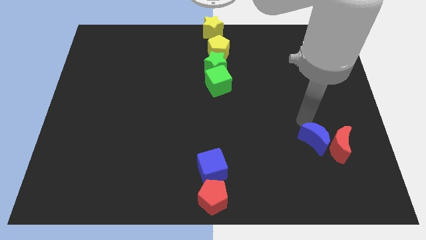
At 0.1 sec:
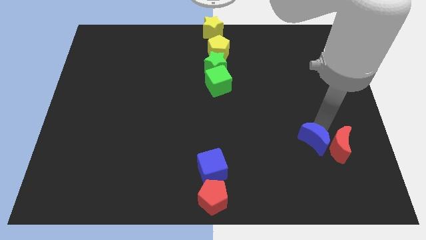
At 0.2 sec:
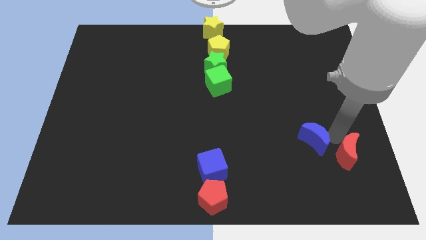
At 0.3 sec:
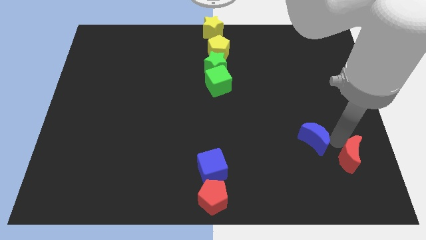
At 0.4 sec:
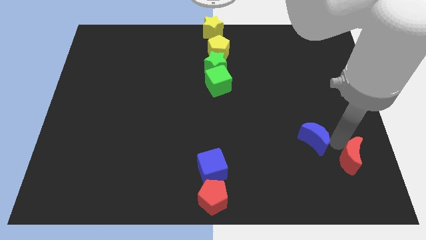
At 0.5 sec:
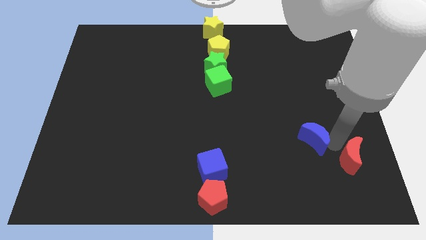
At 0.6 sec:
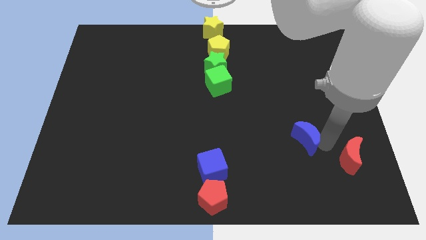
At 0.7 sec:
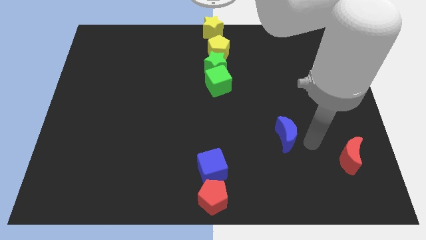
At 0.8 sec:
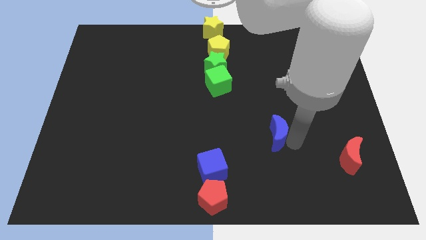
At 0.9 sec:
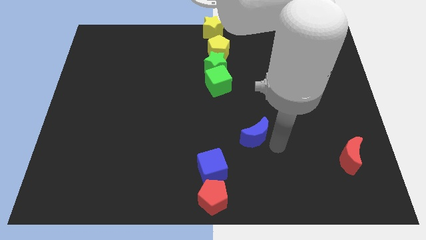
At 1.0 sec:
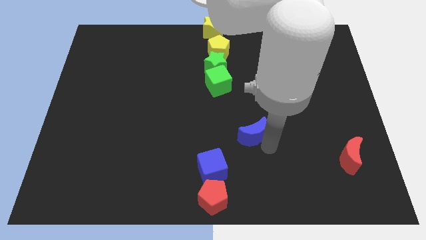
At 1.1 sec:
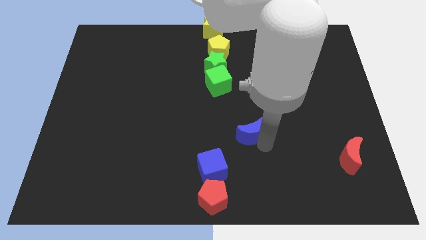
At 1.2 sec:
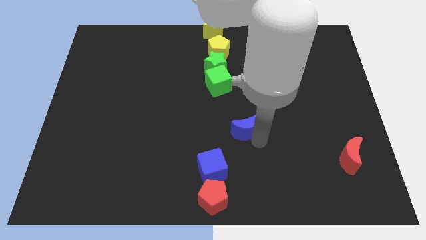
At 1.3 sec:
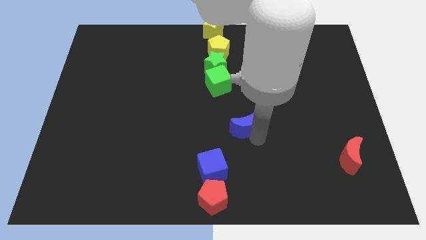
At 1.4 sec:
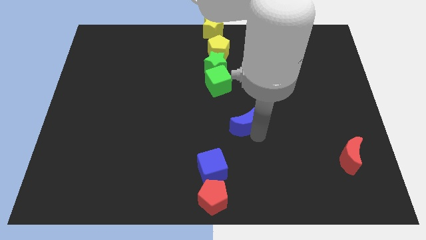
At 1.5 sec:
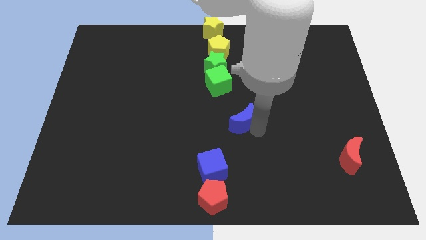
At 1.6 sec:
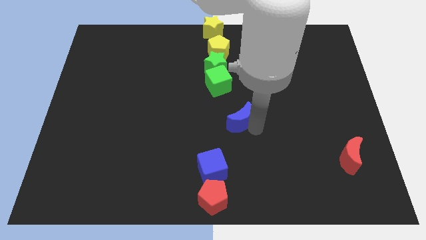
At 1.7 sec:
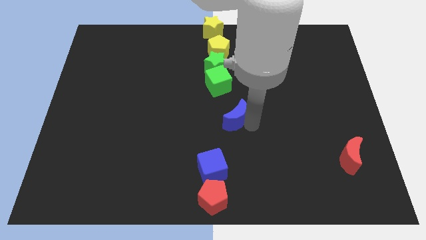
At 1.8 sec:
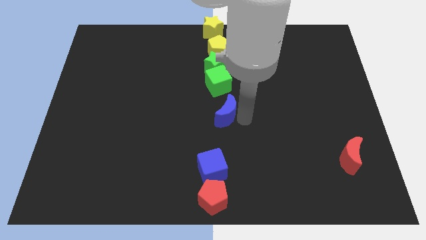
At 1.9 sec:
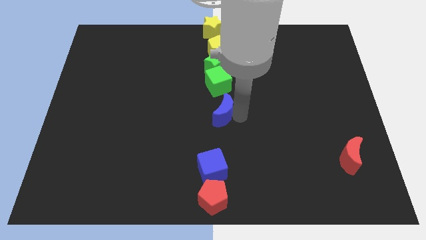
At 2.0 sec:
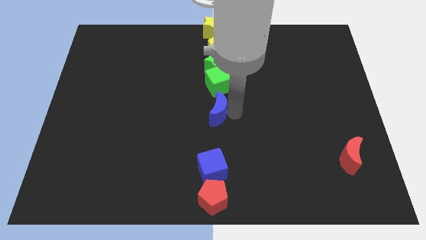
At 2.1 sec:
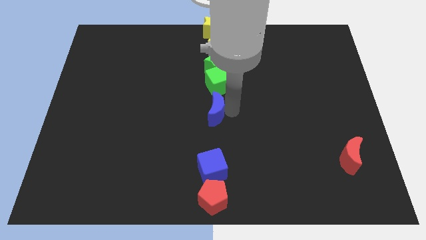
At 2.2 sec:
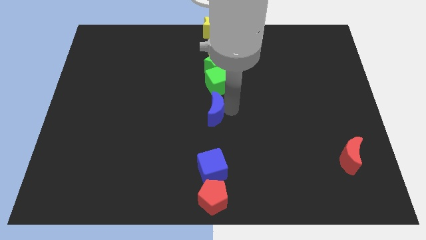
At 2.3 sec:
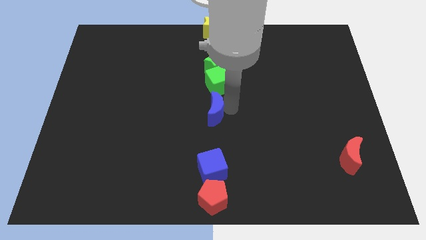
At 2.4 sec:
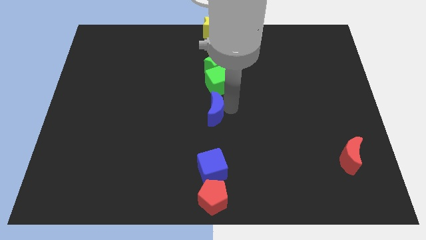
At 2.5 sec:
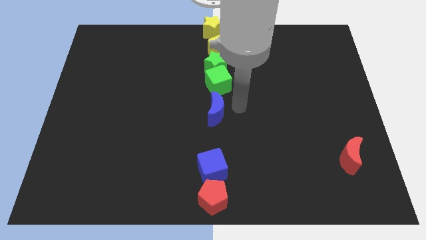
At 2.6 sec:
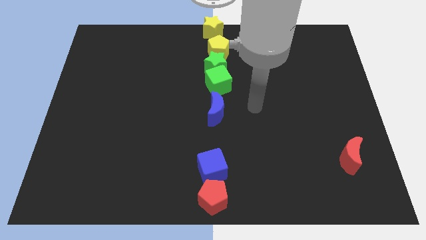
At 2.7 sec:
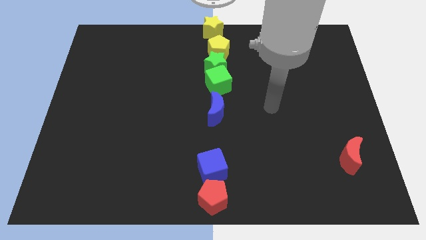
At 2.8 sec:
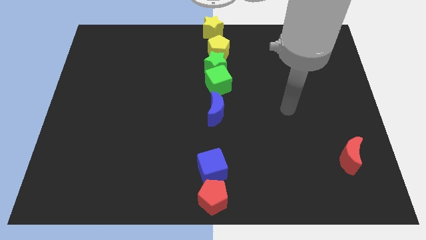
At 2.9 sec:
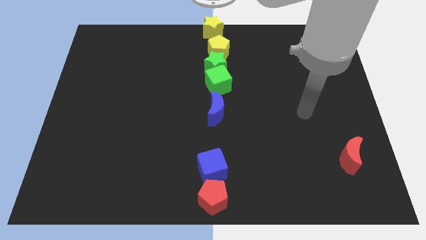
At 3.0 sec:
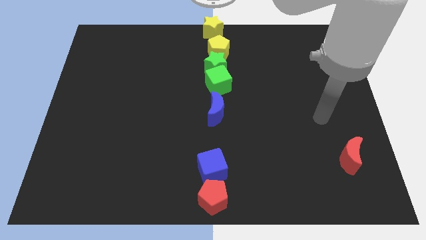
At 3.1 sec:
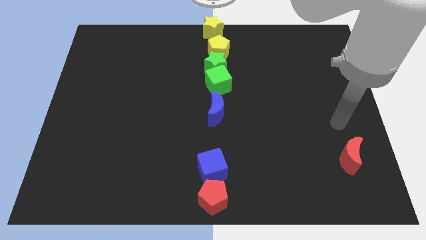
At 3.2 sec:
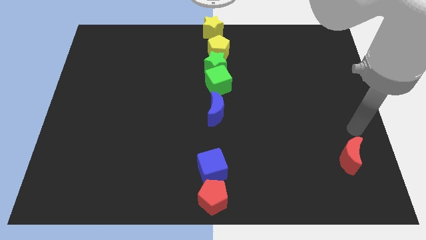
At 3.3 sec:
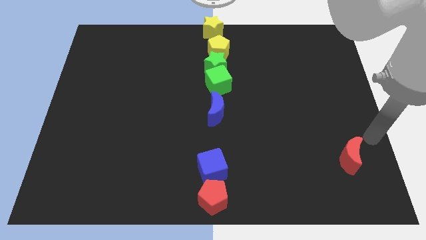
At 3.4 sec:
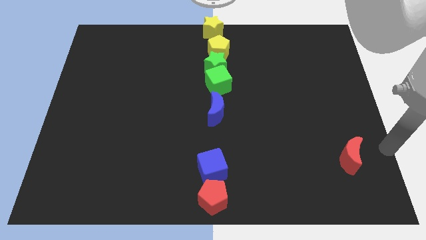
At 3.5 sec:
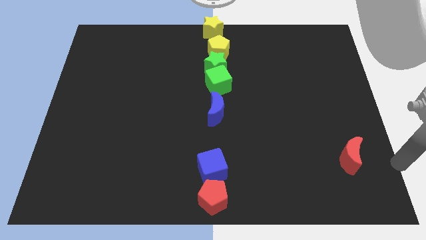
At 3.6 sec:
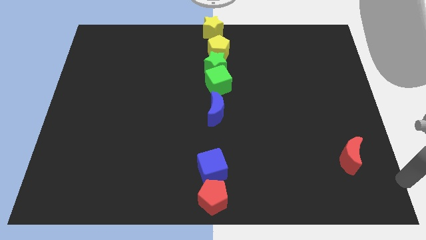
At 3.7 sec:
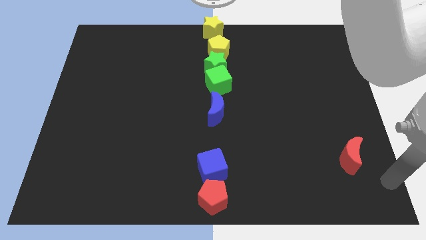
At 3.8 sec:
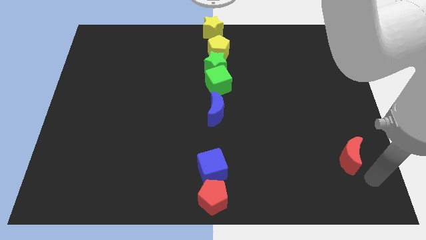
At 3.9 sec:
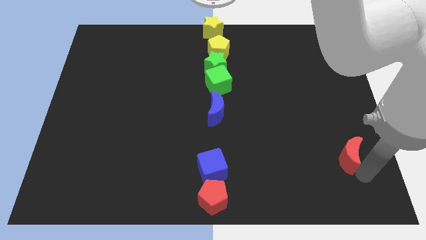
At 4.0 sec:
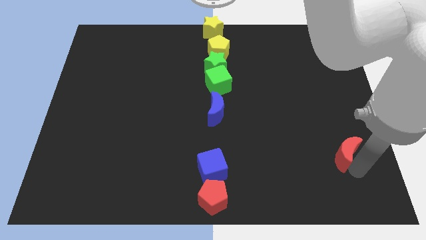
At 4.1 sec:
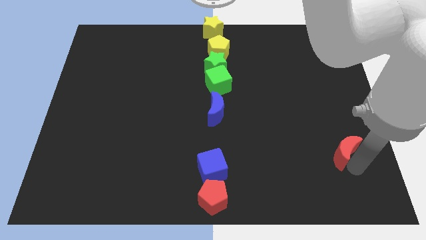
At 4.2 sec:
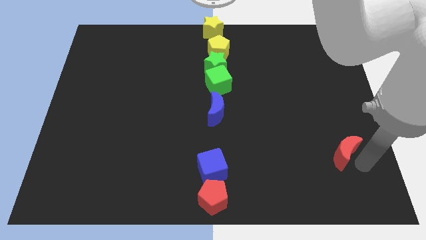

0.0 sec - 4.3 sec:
place the blue crescent underneath the green cube

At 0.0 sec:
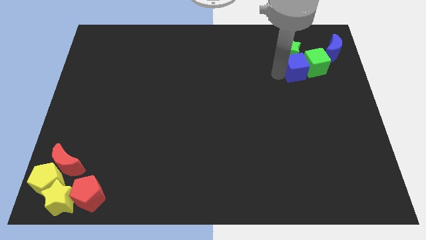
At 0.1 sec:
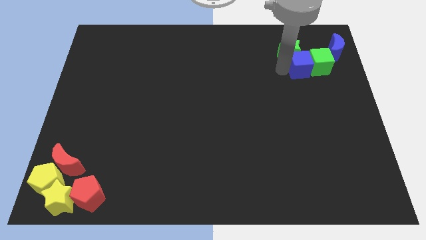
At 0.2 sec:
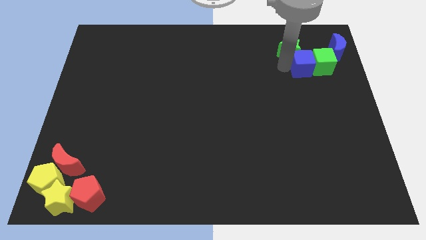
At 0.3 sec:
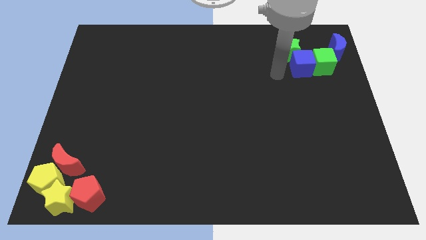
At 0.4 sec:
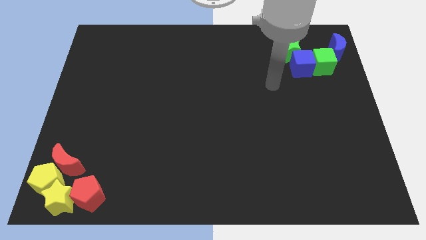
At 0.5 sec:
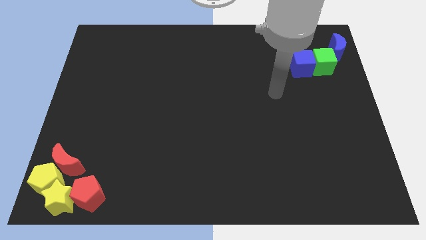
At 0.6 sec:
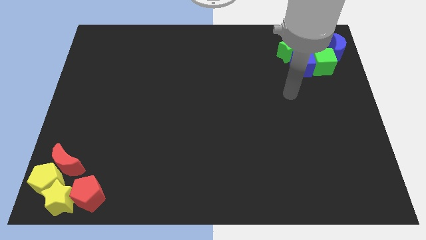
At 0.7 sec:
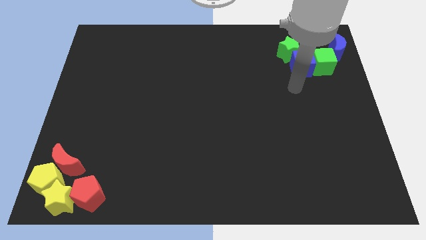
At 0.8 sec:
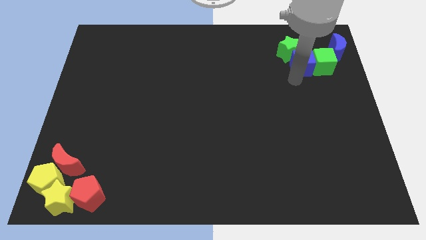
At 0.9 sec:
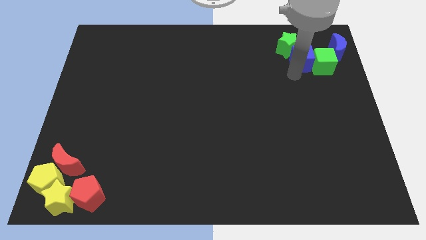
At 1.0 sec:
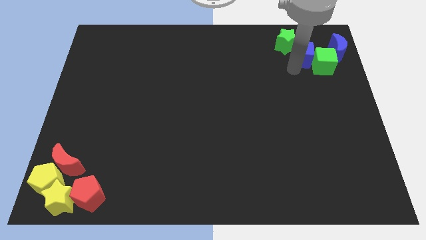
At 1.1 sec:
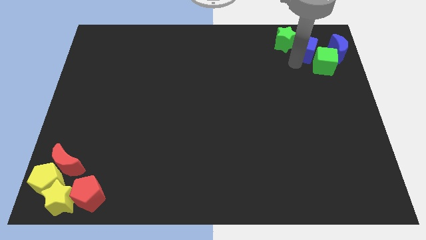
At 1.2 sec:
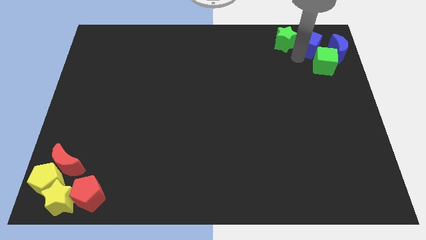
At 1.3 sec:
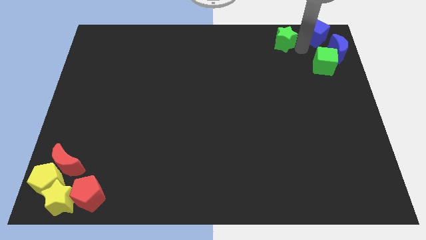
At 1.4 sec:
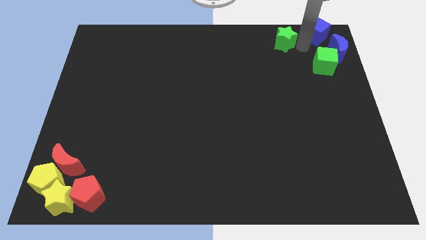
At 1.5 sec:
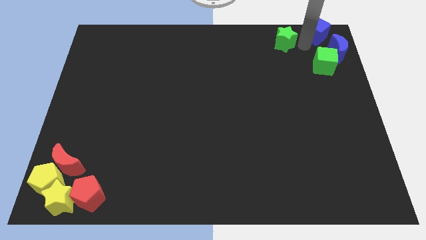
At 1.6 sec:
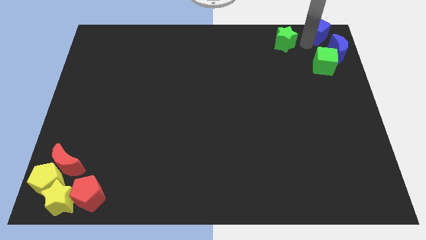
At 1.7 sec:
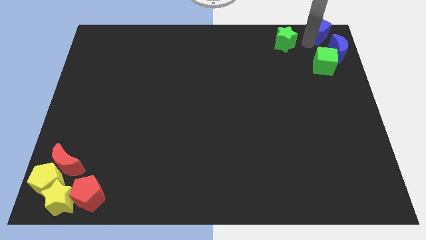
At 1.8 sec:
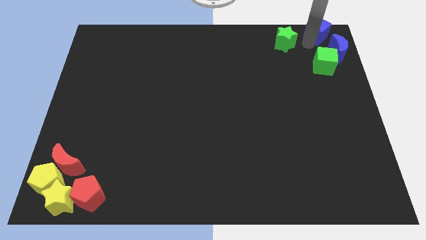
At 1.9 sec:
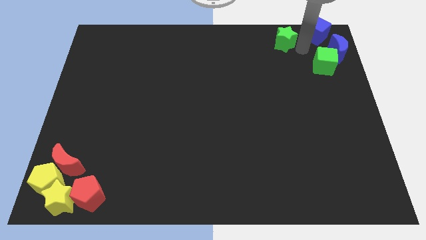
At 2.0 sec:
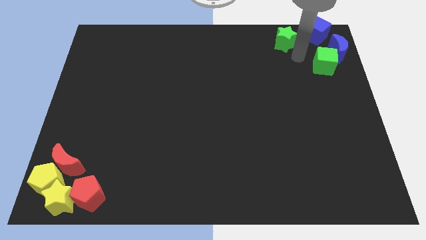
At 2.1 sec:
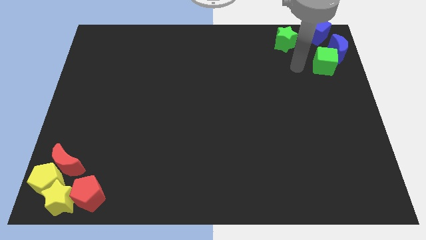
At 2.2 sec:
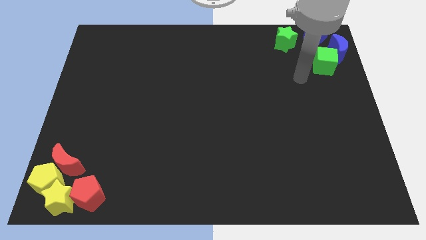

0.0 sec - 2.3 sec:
push the red pentagon to the left side of the blue moon

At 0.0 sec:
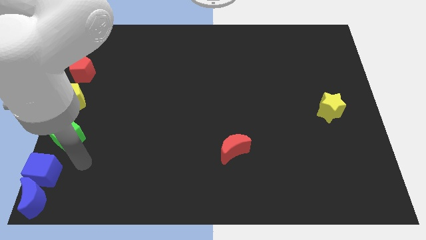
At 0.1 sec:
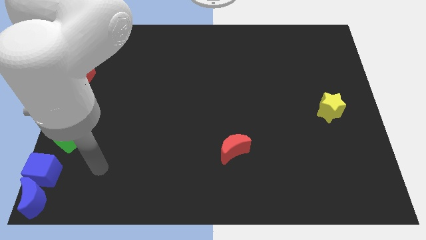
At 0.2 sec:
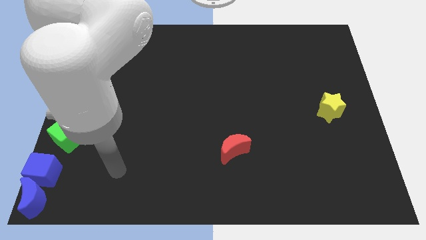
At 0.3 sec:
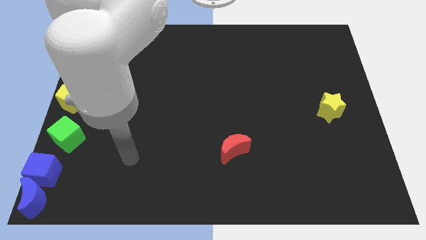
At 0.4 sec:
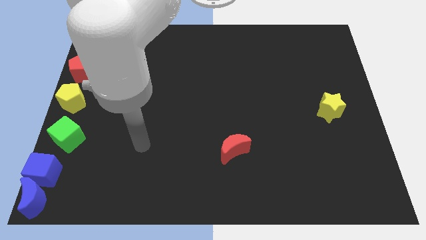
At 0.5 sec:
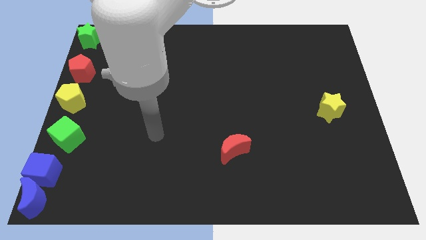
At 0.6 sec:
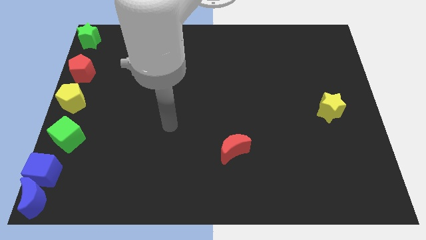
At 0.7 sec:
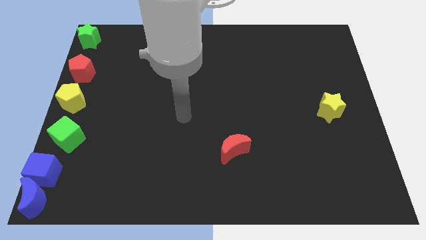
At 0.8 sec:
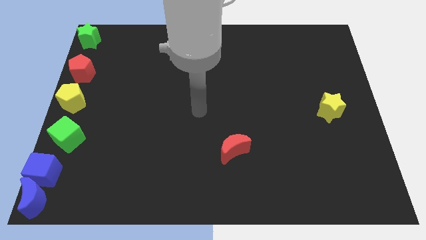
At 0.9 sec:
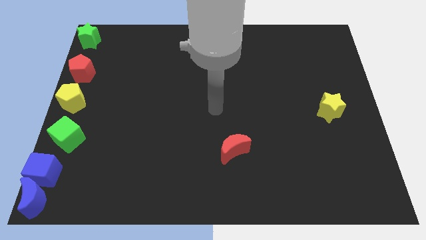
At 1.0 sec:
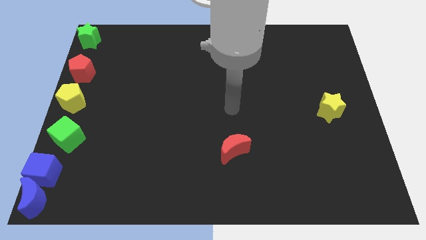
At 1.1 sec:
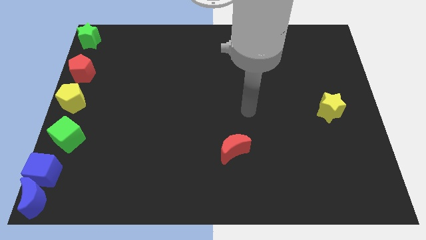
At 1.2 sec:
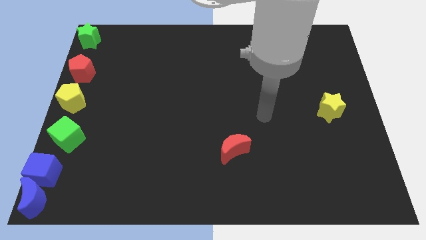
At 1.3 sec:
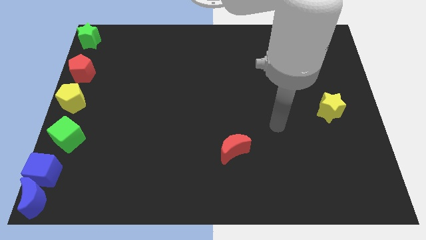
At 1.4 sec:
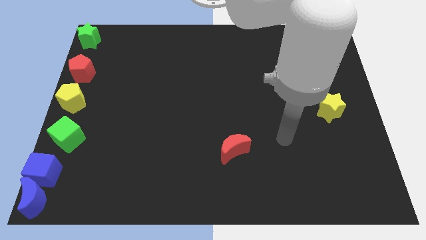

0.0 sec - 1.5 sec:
go and place your hand in between the red crescent and the yellow star

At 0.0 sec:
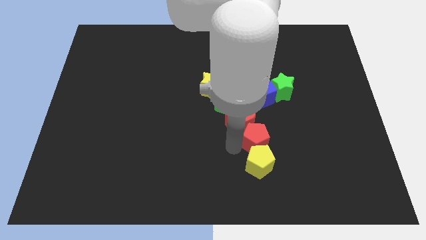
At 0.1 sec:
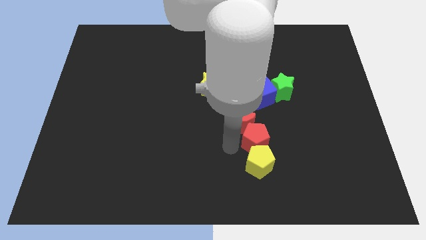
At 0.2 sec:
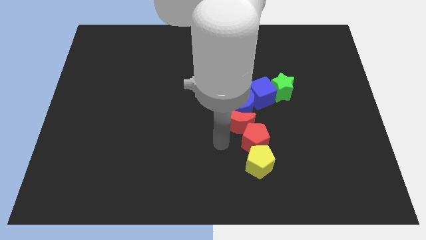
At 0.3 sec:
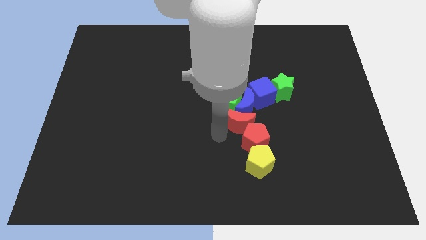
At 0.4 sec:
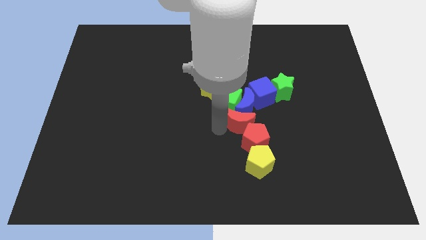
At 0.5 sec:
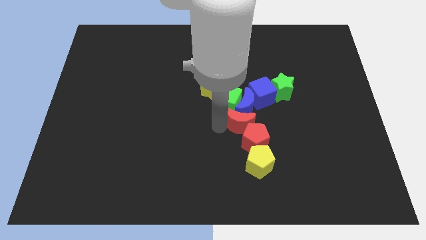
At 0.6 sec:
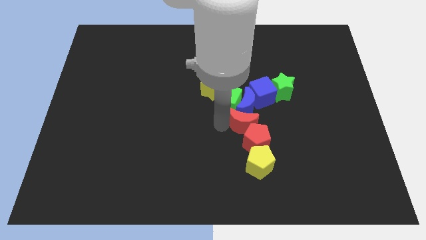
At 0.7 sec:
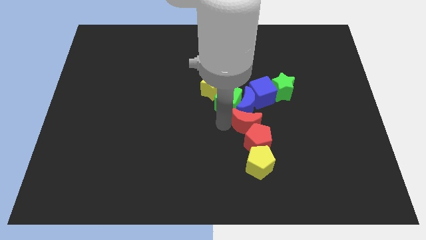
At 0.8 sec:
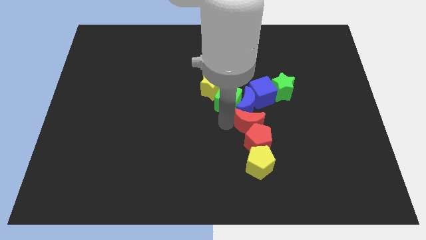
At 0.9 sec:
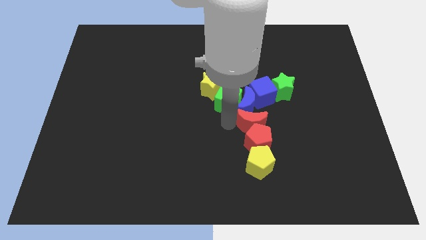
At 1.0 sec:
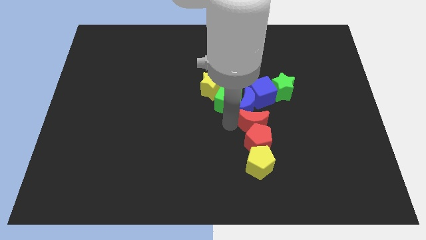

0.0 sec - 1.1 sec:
place the red moon above the red pentagon
